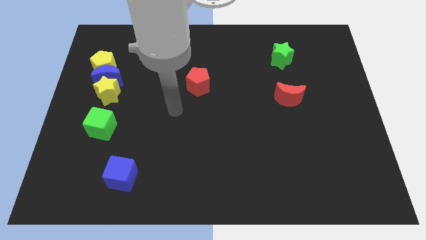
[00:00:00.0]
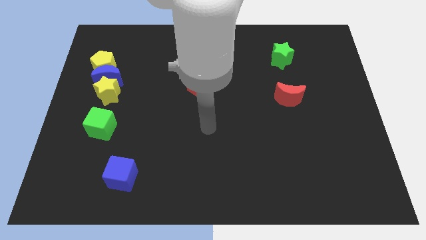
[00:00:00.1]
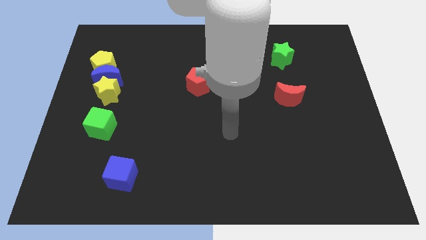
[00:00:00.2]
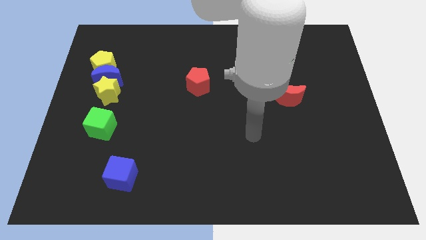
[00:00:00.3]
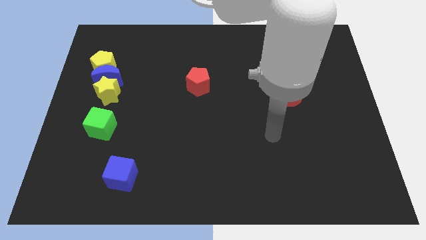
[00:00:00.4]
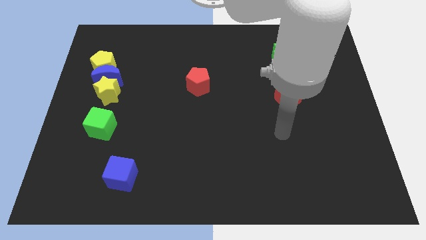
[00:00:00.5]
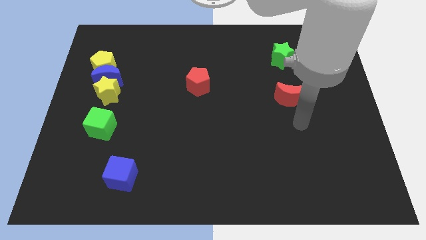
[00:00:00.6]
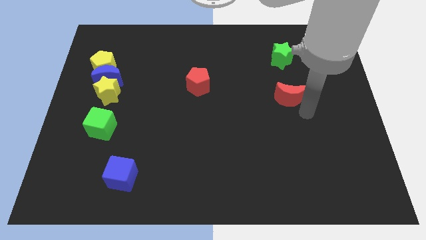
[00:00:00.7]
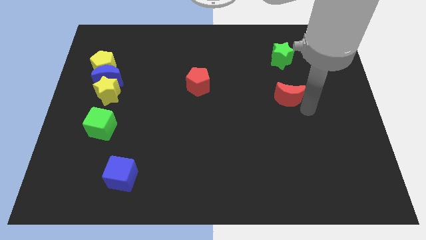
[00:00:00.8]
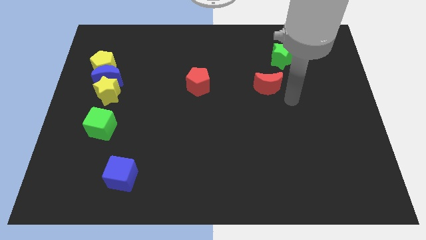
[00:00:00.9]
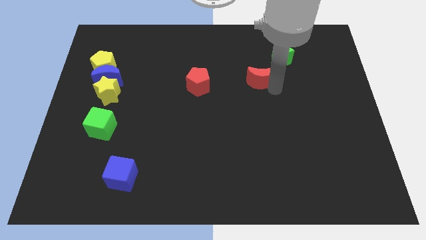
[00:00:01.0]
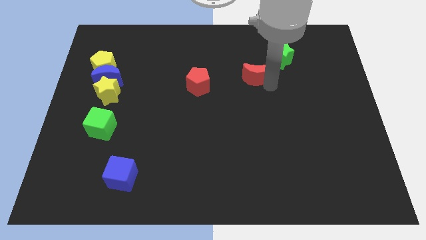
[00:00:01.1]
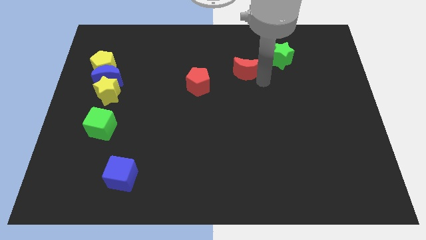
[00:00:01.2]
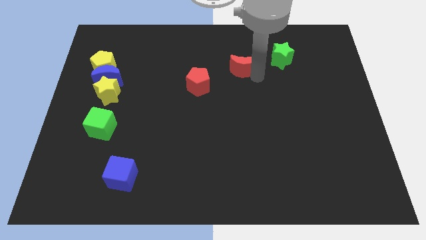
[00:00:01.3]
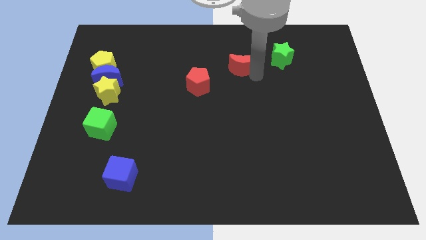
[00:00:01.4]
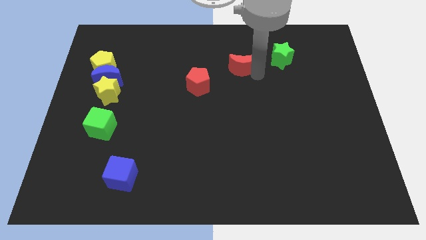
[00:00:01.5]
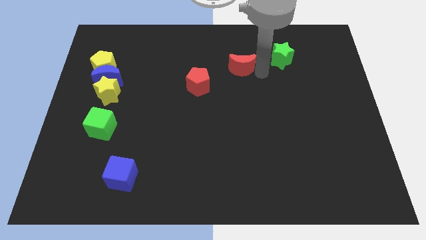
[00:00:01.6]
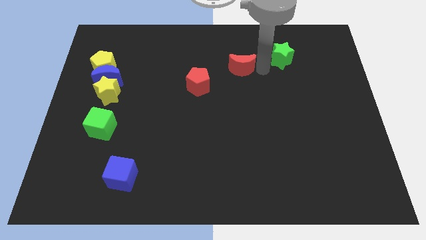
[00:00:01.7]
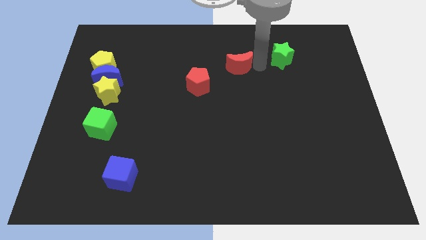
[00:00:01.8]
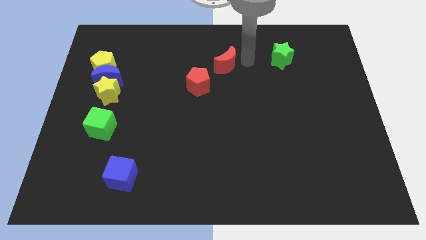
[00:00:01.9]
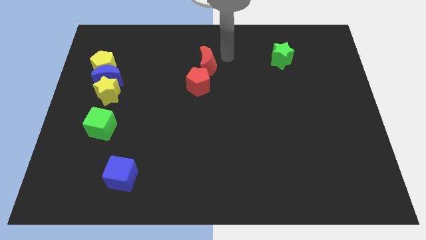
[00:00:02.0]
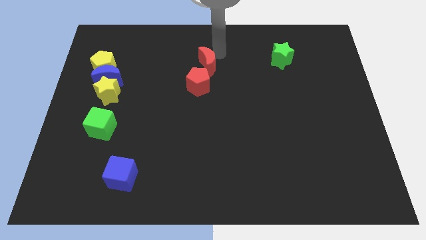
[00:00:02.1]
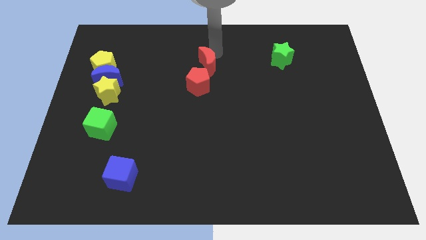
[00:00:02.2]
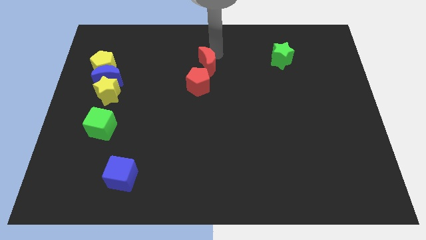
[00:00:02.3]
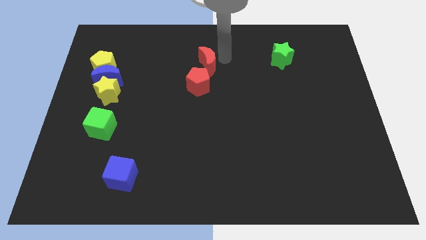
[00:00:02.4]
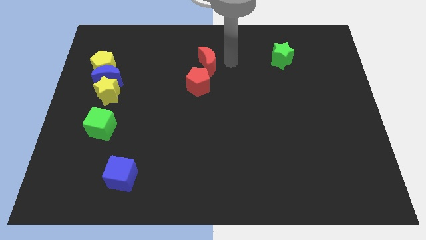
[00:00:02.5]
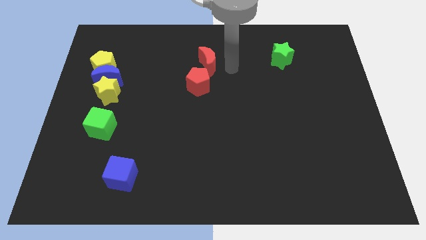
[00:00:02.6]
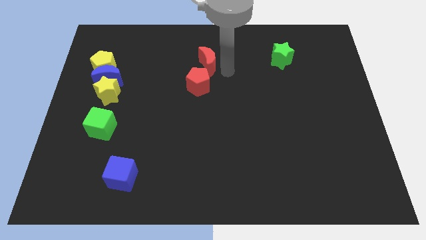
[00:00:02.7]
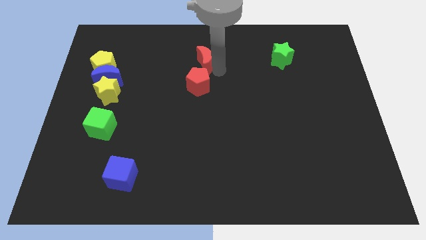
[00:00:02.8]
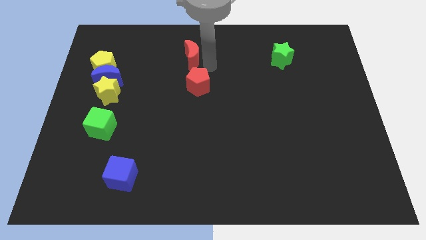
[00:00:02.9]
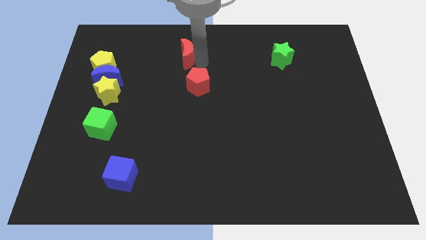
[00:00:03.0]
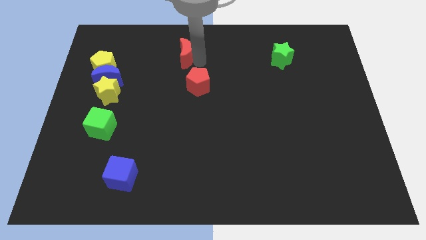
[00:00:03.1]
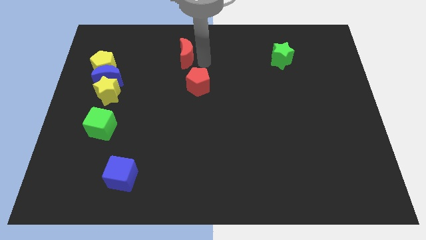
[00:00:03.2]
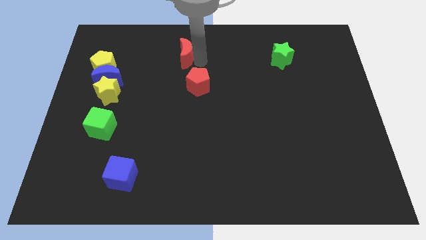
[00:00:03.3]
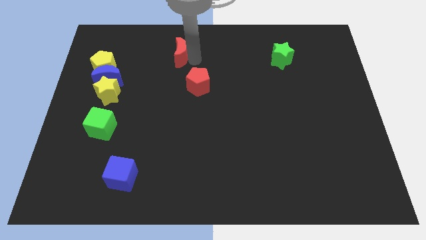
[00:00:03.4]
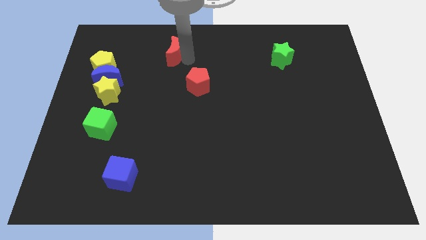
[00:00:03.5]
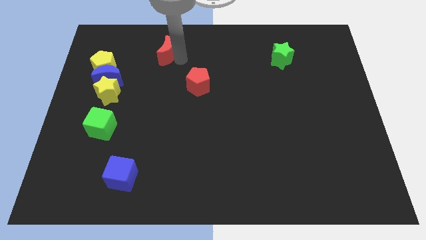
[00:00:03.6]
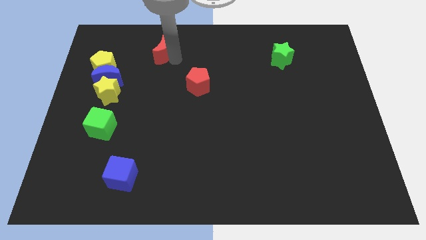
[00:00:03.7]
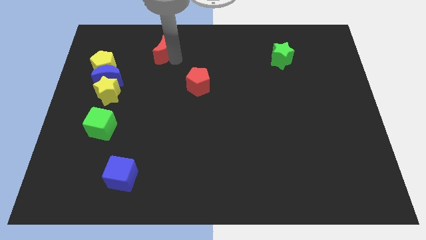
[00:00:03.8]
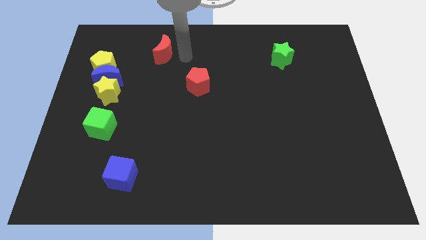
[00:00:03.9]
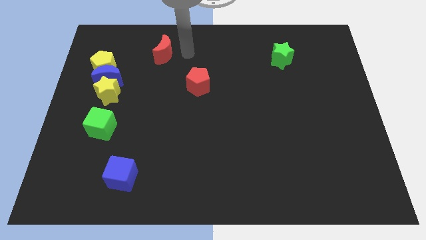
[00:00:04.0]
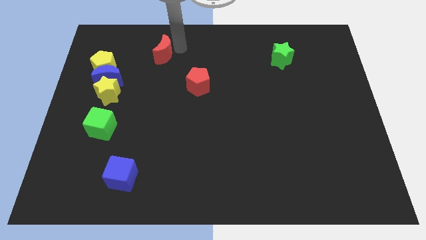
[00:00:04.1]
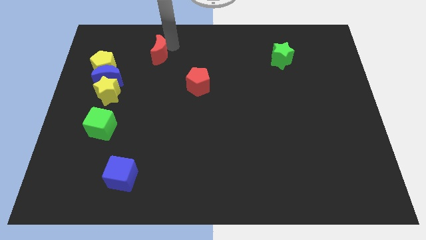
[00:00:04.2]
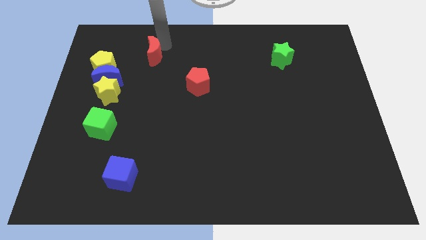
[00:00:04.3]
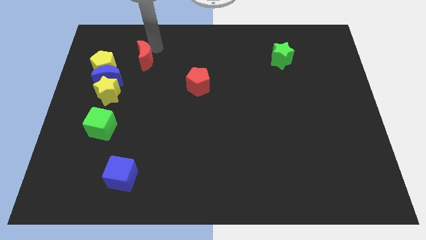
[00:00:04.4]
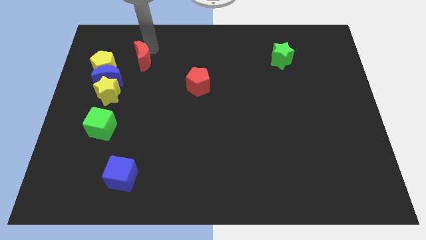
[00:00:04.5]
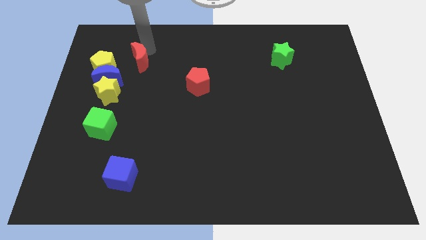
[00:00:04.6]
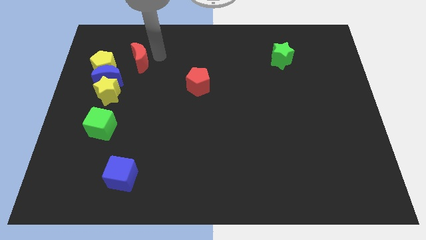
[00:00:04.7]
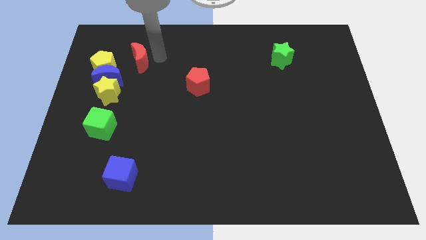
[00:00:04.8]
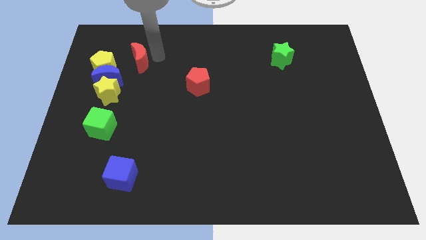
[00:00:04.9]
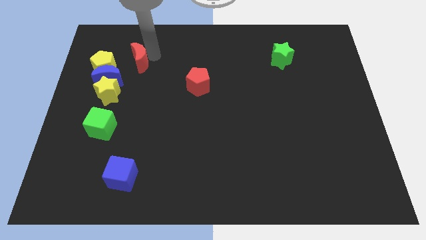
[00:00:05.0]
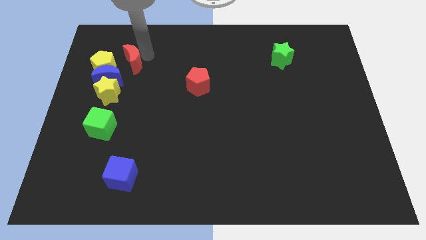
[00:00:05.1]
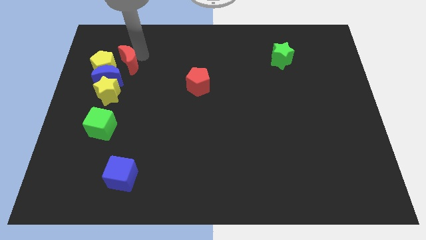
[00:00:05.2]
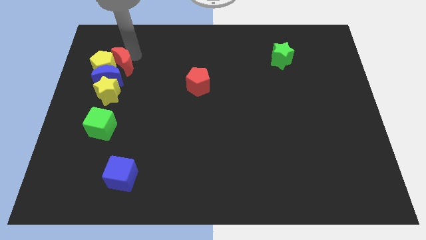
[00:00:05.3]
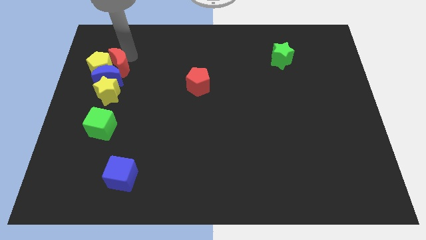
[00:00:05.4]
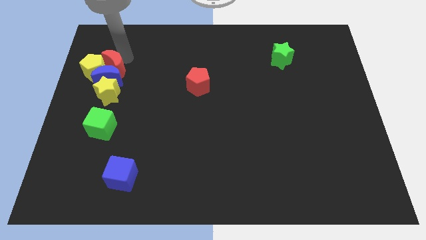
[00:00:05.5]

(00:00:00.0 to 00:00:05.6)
put the red moon to the yellow pentagon

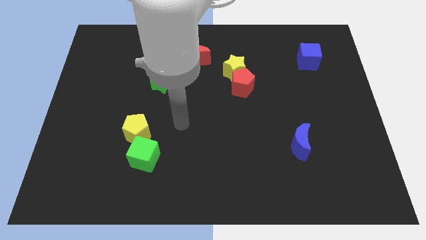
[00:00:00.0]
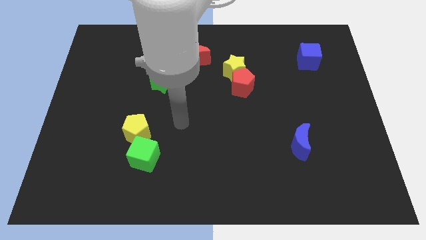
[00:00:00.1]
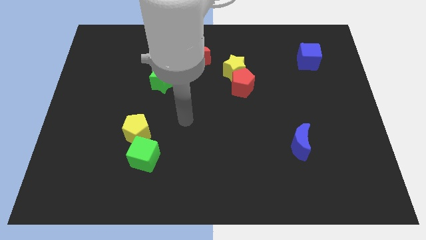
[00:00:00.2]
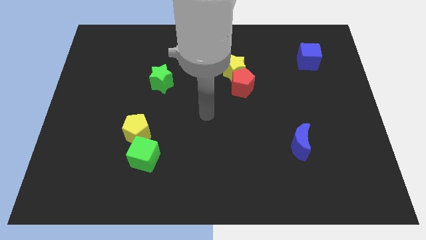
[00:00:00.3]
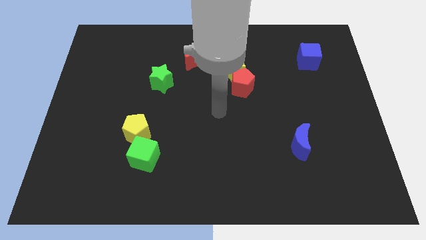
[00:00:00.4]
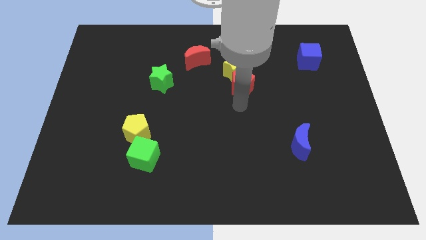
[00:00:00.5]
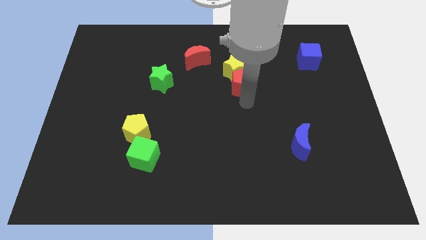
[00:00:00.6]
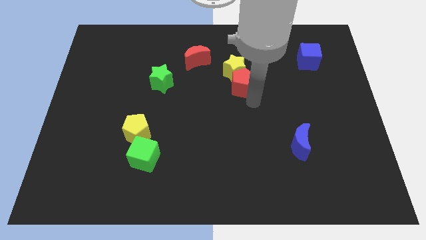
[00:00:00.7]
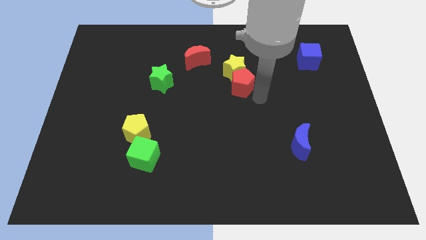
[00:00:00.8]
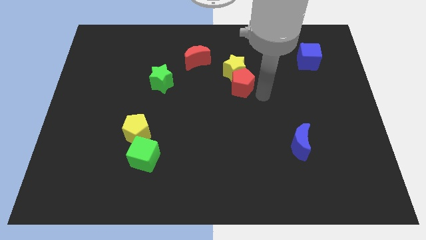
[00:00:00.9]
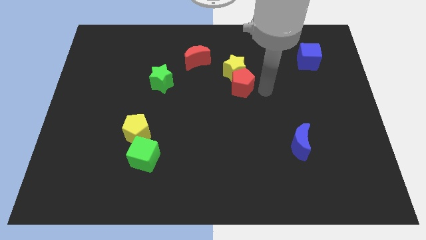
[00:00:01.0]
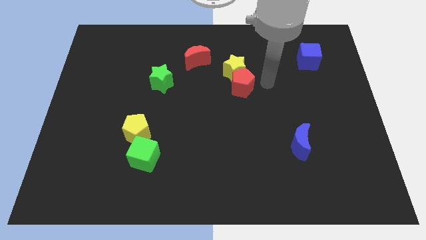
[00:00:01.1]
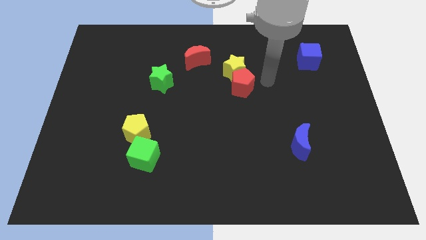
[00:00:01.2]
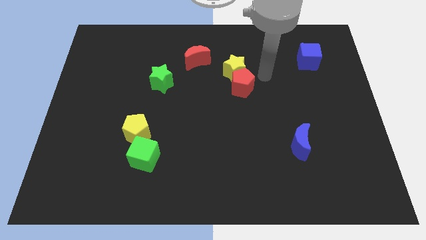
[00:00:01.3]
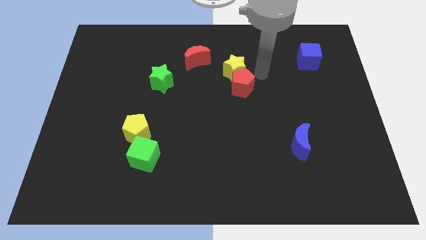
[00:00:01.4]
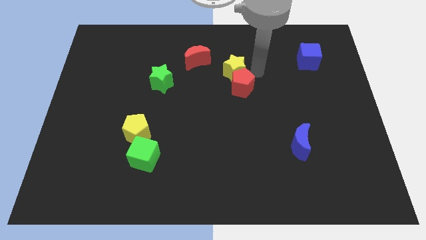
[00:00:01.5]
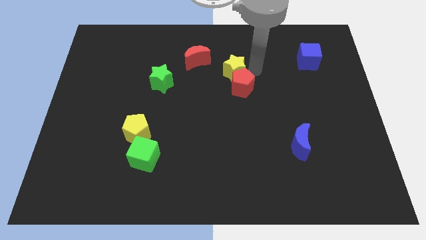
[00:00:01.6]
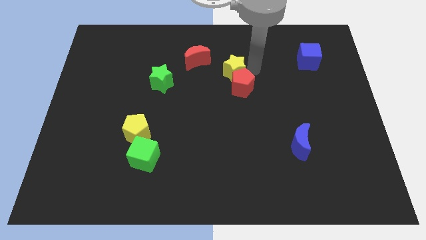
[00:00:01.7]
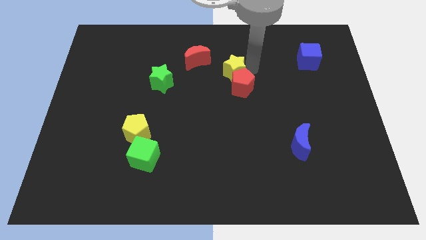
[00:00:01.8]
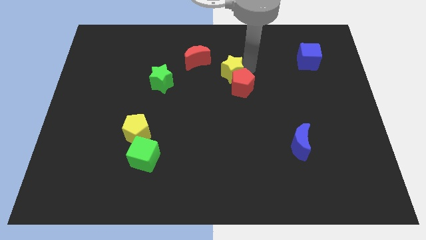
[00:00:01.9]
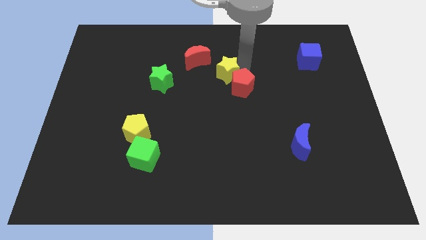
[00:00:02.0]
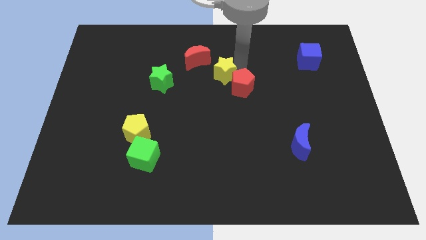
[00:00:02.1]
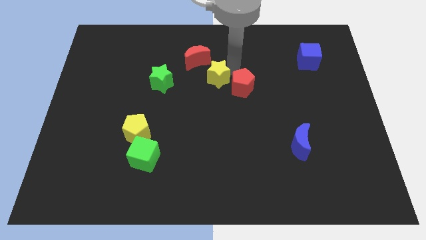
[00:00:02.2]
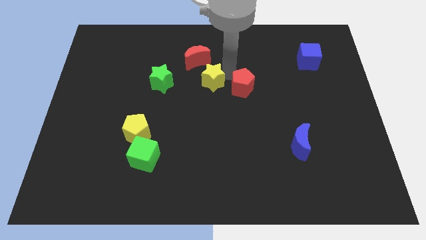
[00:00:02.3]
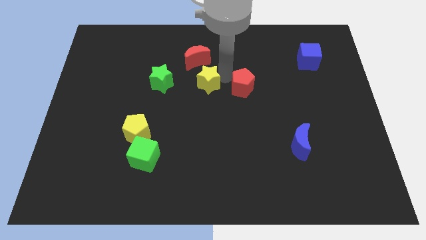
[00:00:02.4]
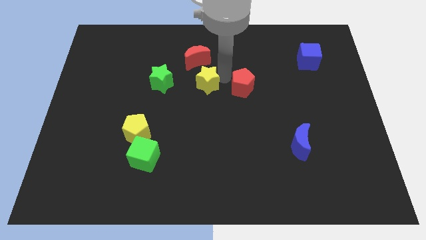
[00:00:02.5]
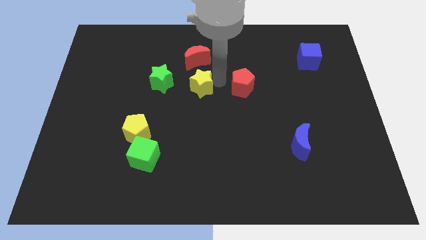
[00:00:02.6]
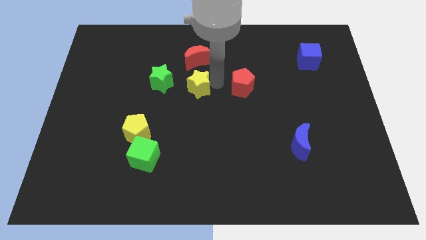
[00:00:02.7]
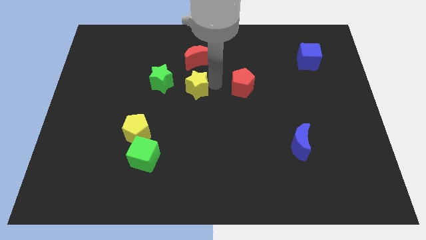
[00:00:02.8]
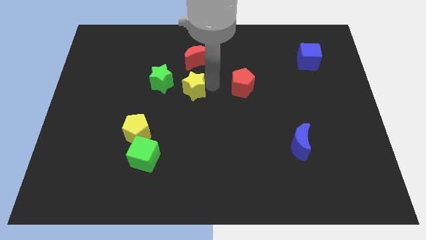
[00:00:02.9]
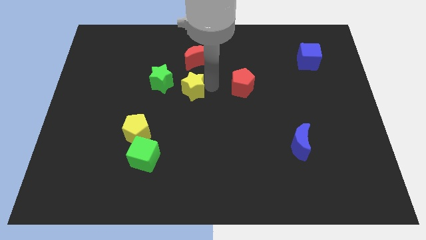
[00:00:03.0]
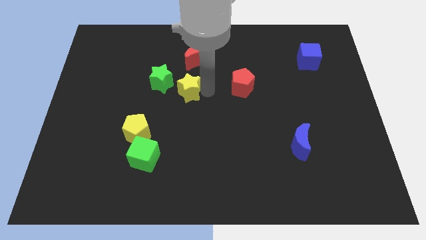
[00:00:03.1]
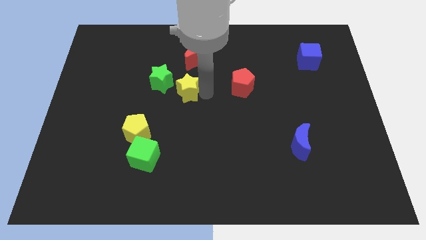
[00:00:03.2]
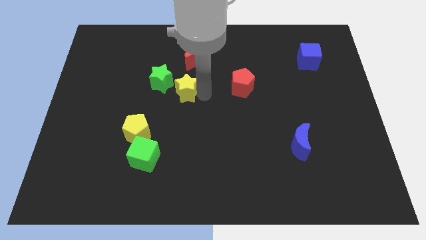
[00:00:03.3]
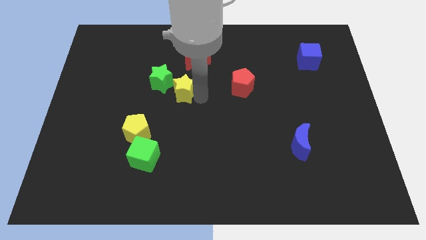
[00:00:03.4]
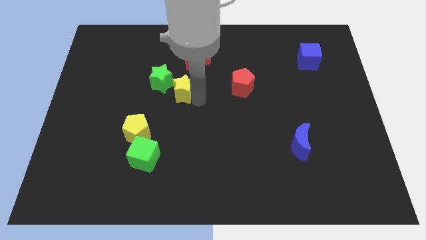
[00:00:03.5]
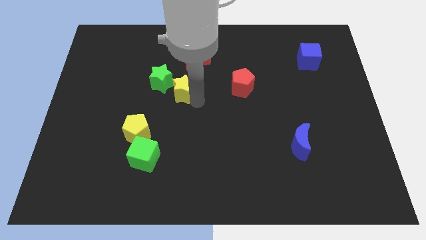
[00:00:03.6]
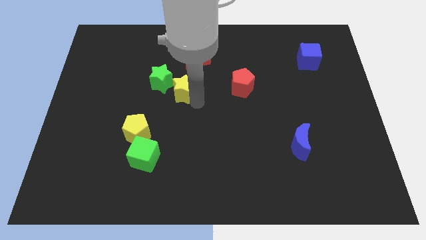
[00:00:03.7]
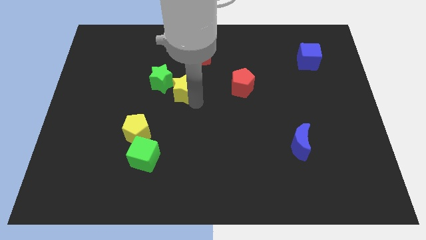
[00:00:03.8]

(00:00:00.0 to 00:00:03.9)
move the yellow star next to the green star
